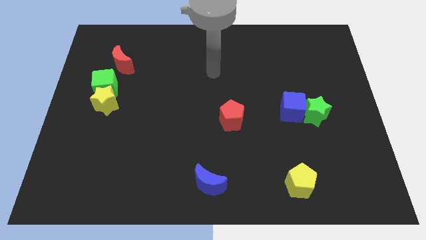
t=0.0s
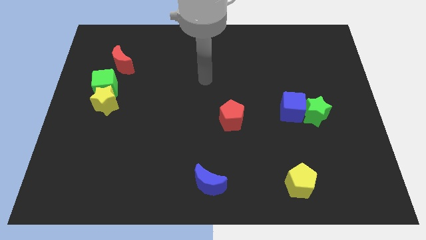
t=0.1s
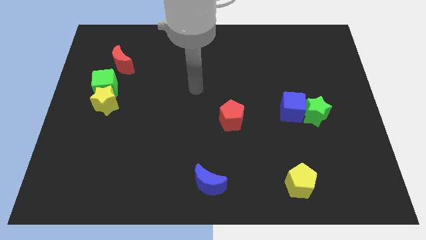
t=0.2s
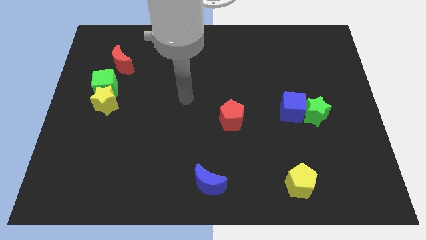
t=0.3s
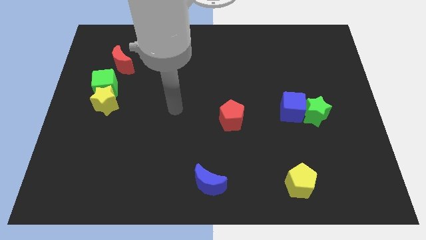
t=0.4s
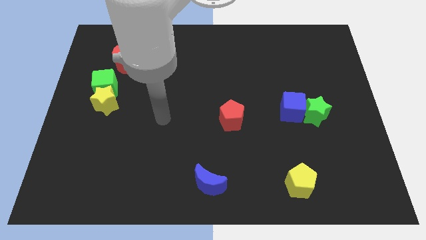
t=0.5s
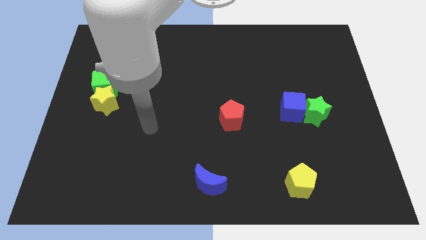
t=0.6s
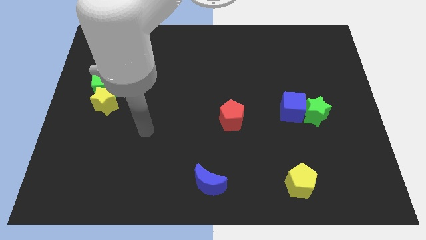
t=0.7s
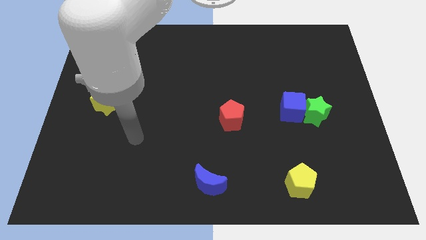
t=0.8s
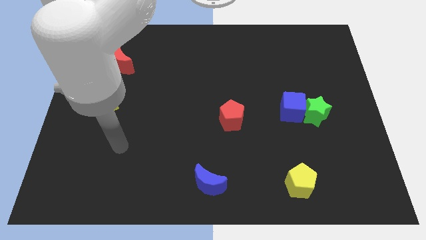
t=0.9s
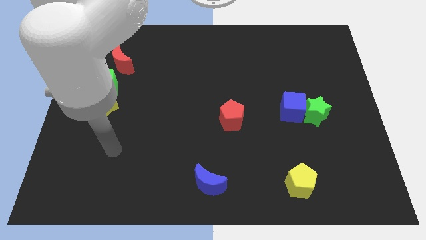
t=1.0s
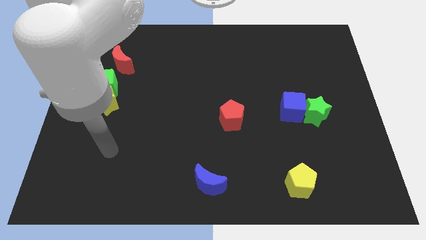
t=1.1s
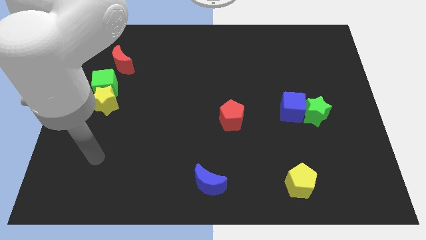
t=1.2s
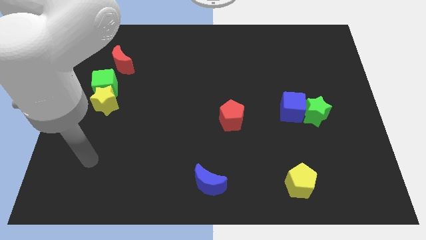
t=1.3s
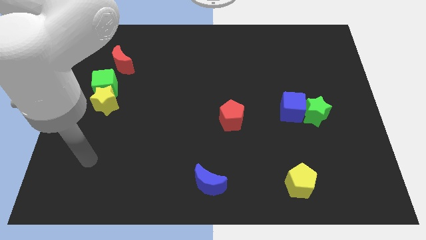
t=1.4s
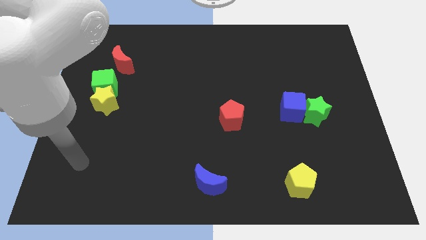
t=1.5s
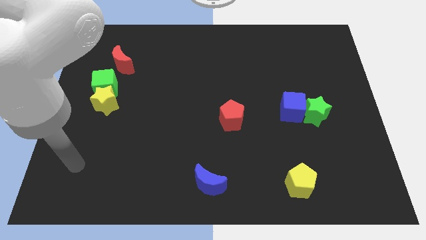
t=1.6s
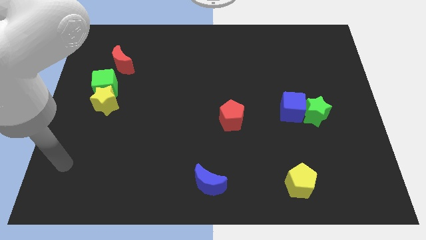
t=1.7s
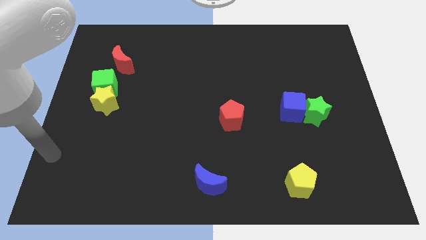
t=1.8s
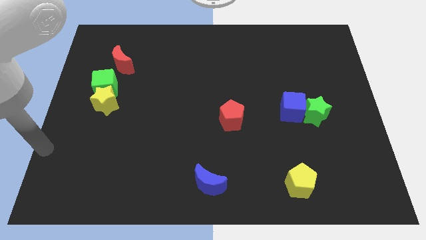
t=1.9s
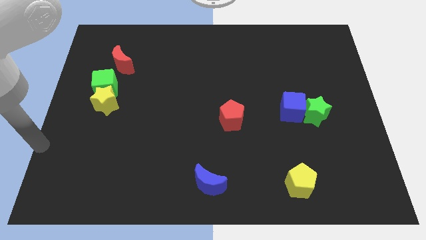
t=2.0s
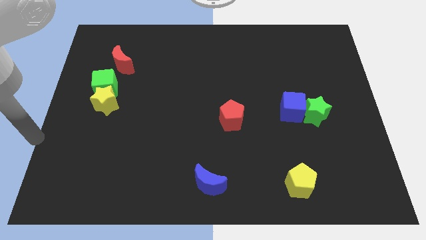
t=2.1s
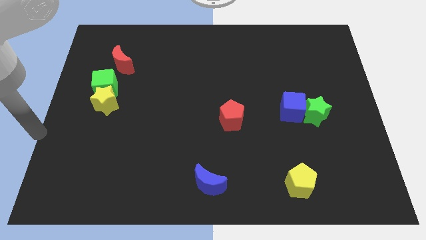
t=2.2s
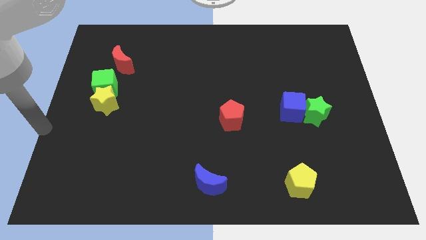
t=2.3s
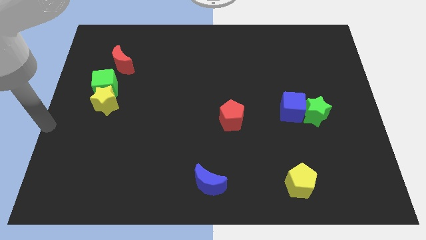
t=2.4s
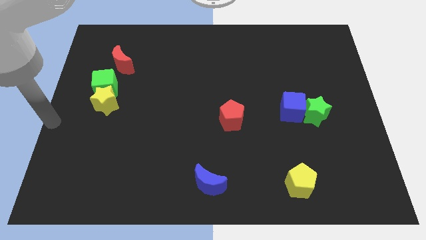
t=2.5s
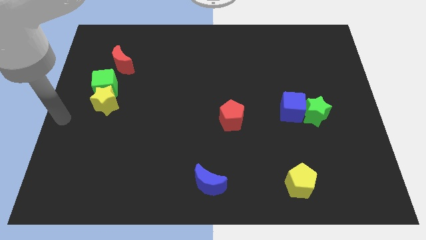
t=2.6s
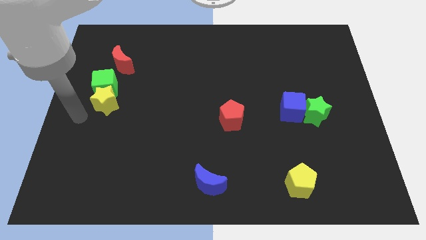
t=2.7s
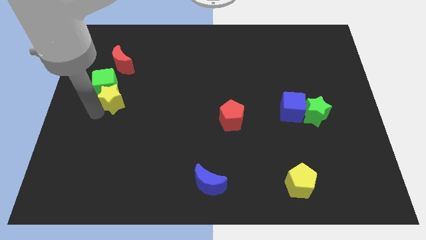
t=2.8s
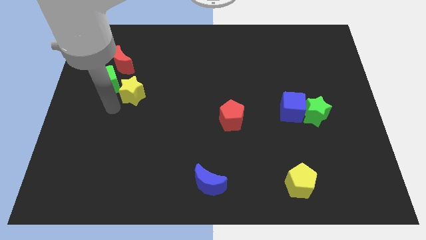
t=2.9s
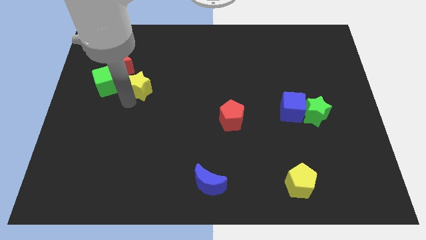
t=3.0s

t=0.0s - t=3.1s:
separate the yellow star from the green cube

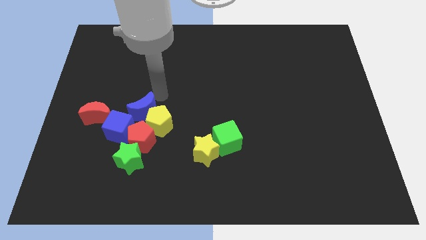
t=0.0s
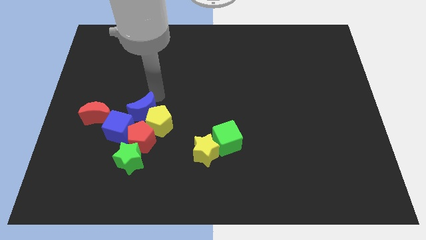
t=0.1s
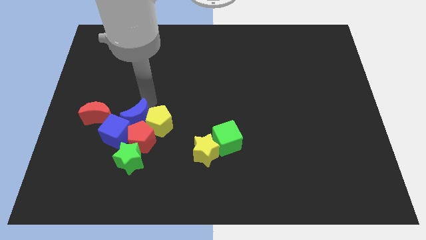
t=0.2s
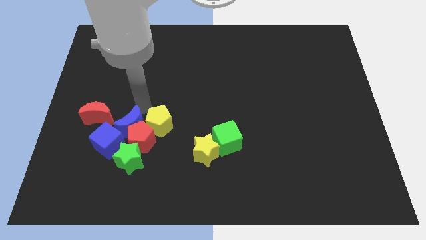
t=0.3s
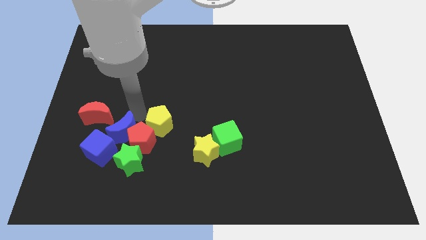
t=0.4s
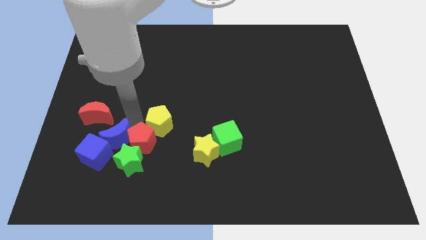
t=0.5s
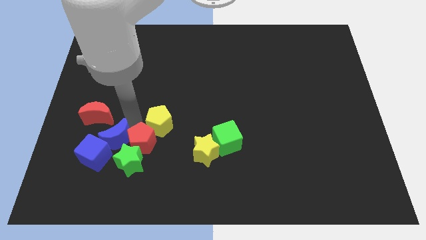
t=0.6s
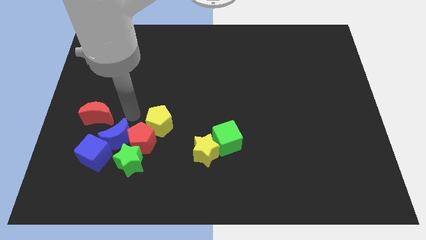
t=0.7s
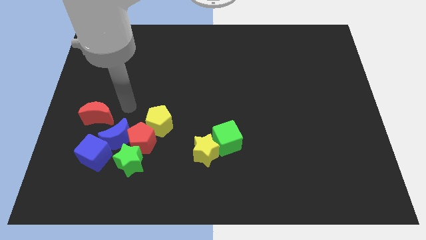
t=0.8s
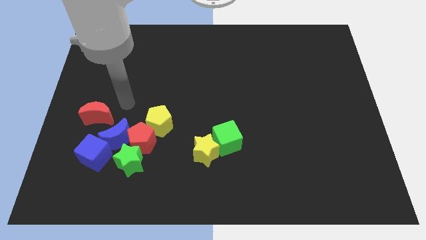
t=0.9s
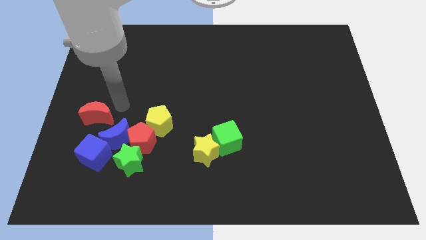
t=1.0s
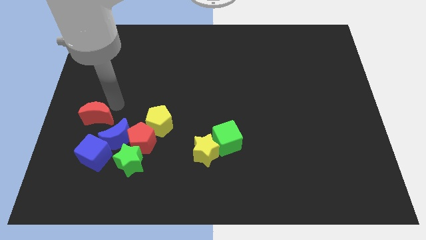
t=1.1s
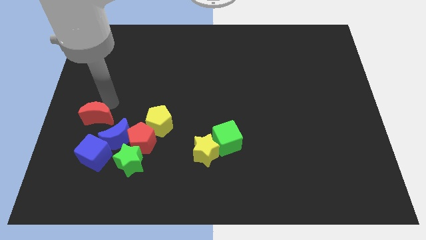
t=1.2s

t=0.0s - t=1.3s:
push the blue blocks towards the bottom left corner

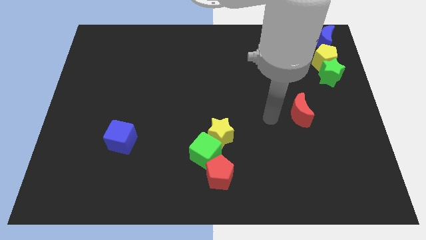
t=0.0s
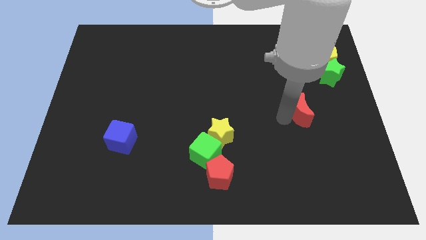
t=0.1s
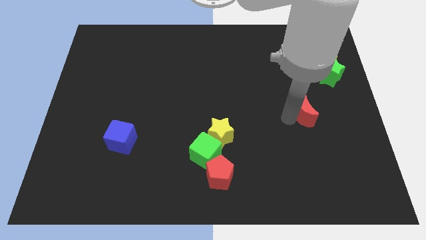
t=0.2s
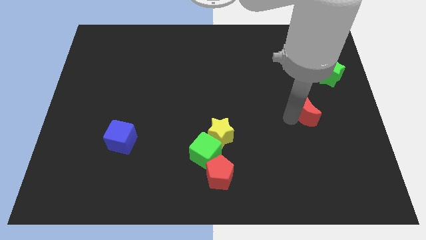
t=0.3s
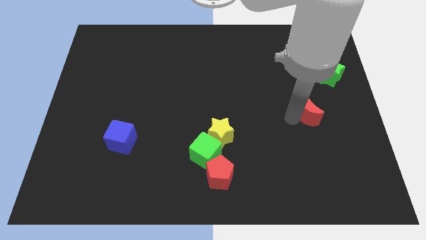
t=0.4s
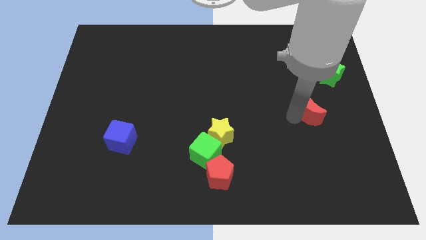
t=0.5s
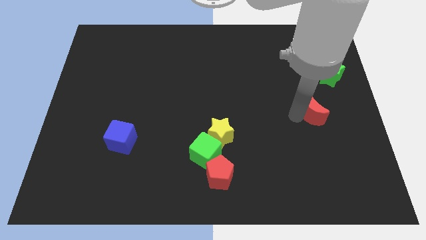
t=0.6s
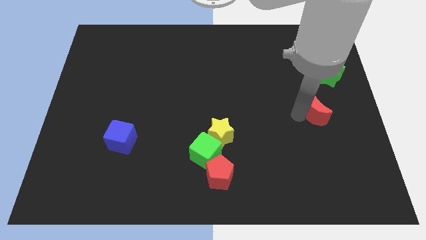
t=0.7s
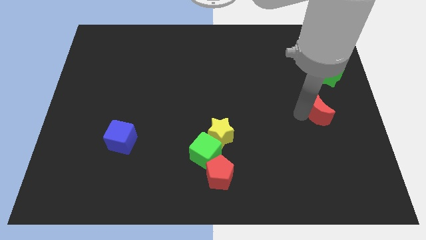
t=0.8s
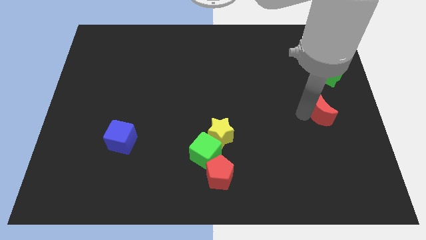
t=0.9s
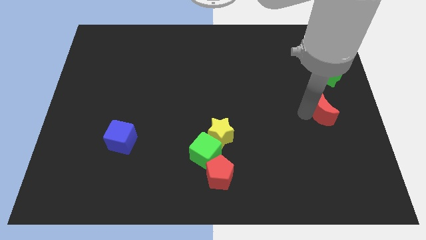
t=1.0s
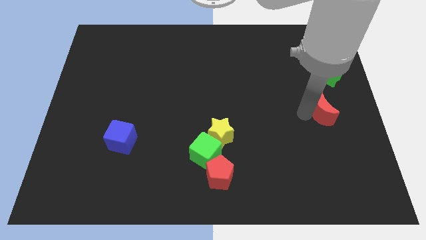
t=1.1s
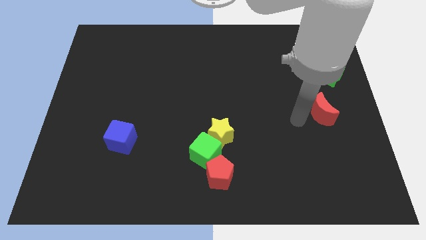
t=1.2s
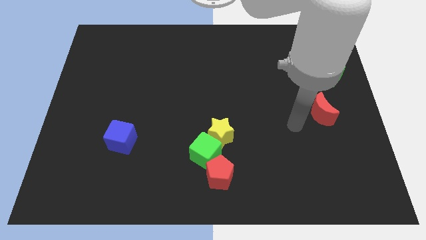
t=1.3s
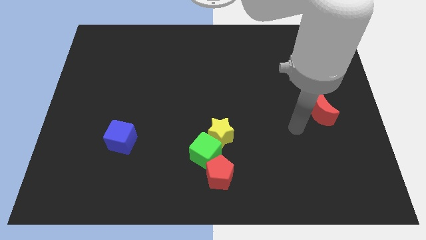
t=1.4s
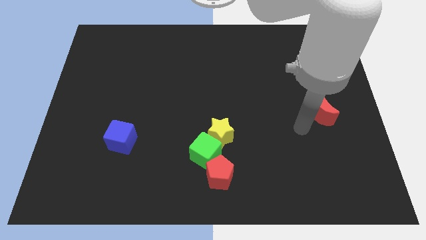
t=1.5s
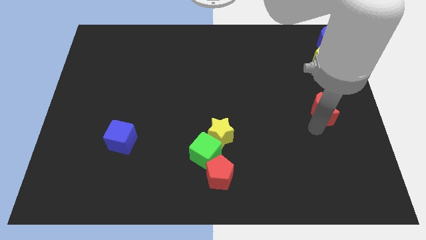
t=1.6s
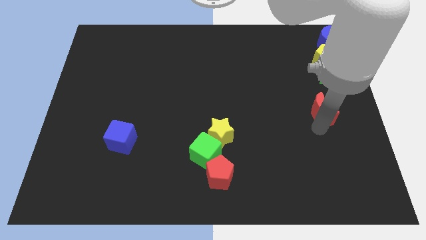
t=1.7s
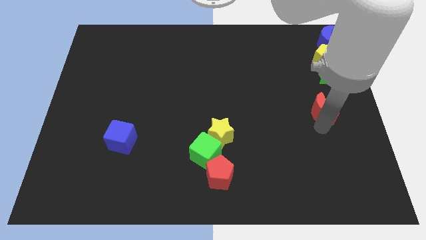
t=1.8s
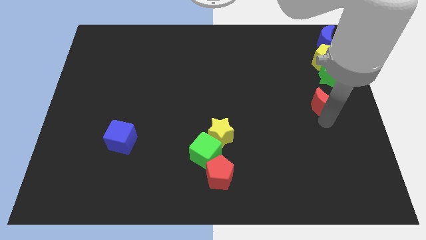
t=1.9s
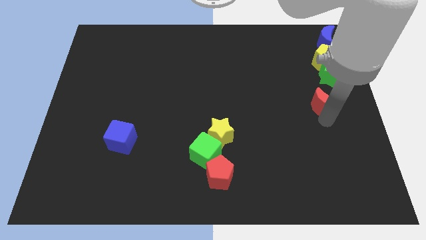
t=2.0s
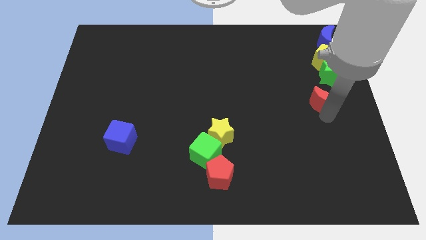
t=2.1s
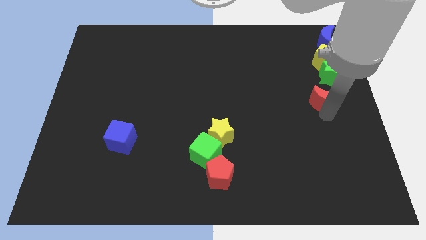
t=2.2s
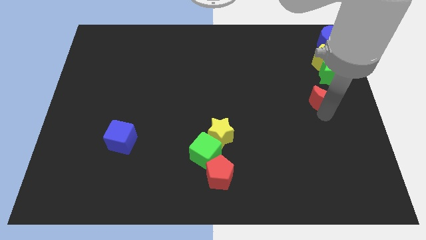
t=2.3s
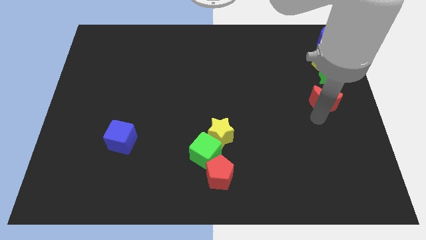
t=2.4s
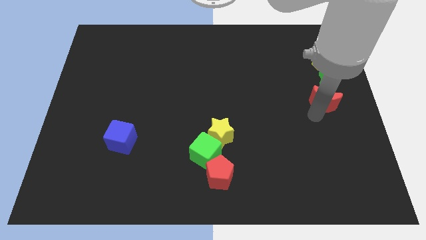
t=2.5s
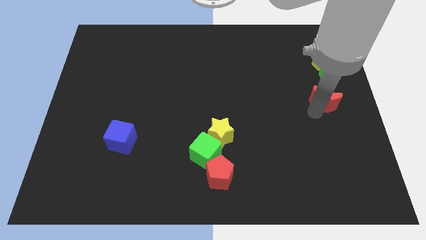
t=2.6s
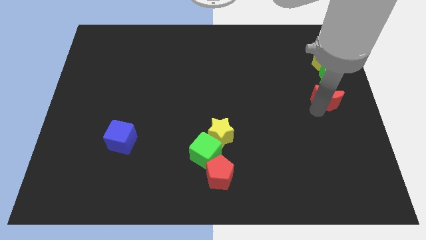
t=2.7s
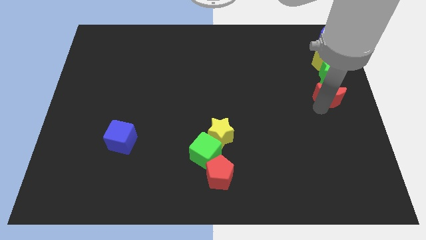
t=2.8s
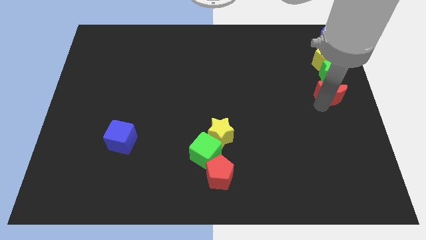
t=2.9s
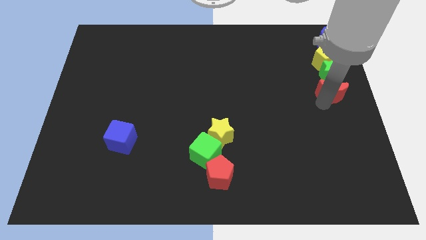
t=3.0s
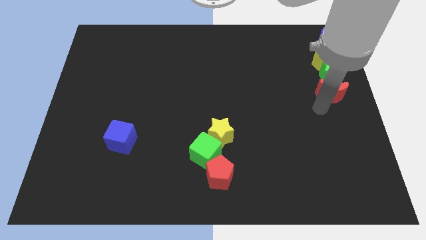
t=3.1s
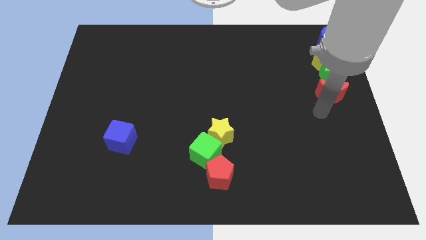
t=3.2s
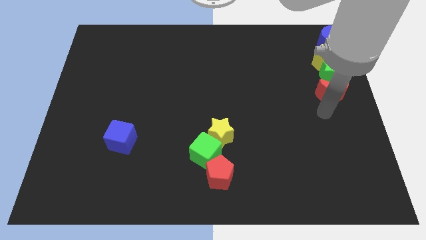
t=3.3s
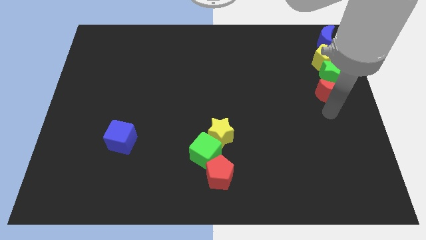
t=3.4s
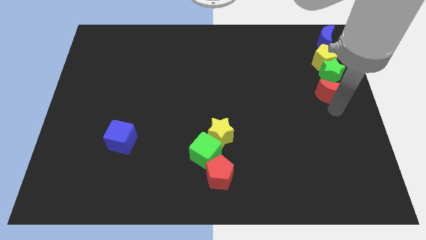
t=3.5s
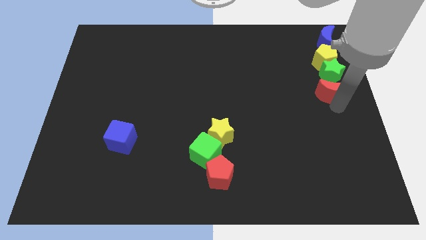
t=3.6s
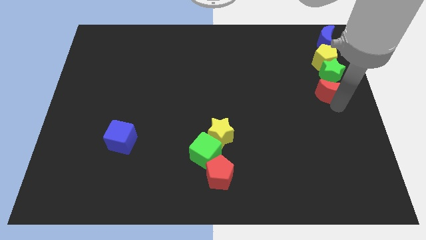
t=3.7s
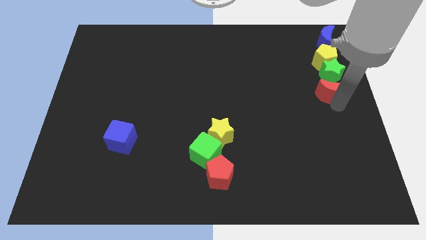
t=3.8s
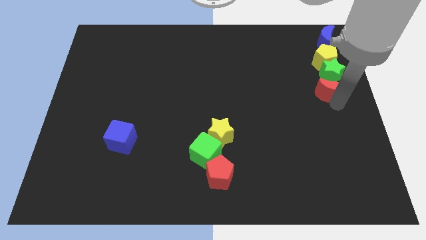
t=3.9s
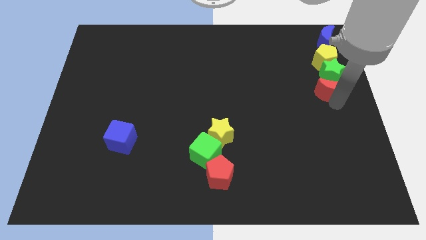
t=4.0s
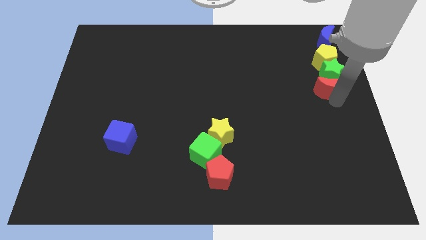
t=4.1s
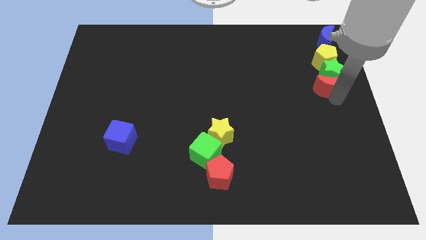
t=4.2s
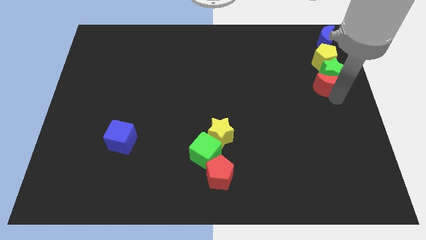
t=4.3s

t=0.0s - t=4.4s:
push the red crescent at the bottom of the green star

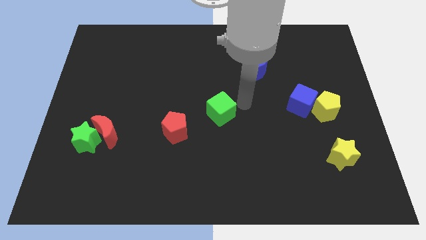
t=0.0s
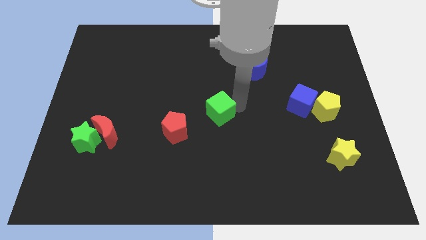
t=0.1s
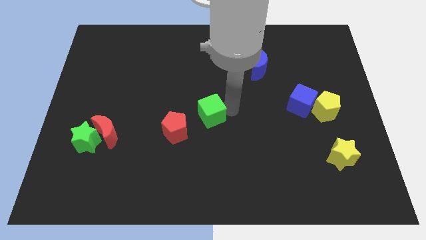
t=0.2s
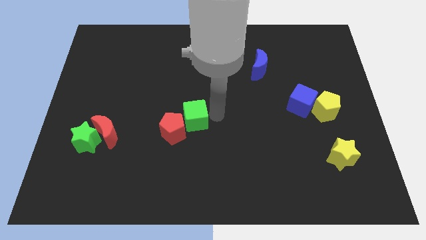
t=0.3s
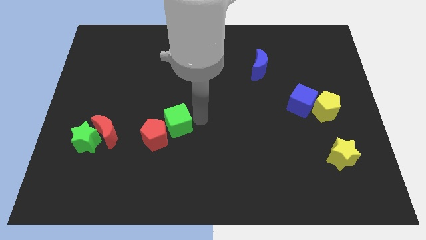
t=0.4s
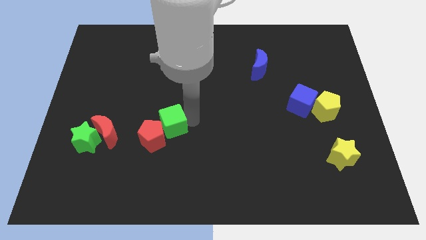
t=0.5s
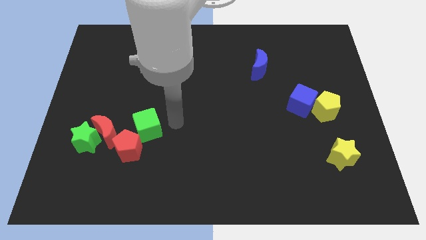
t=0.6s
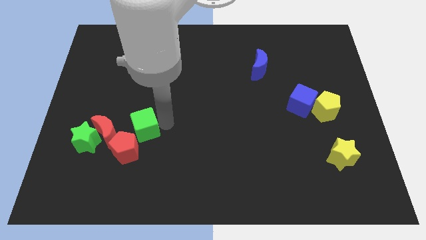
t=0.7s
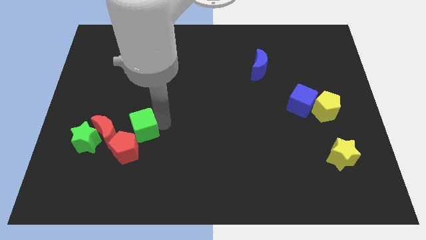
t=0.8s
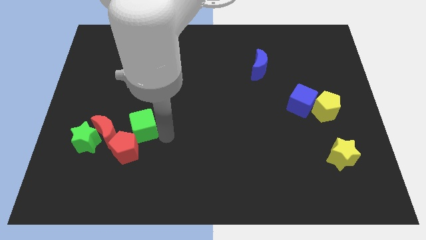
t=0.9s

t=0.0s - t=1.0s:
move green cube near to red moon
